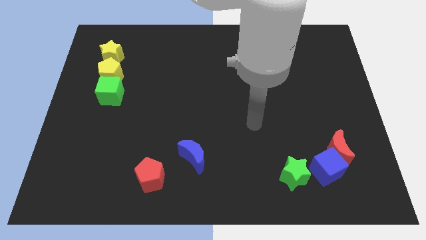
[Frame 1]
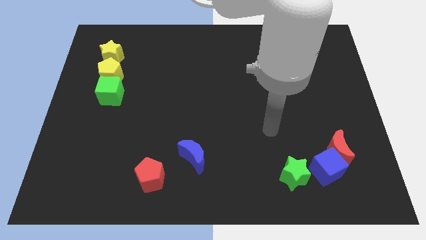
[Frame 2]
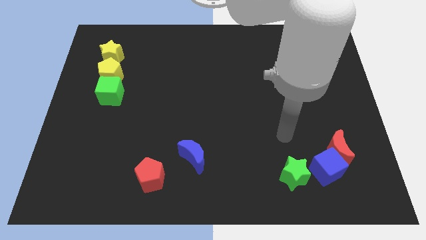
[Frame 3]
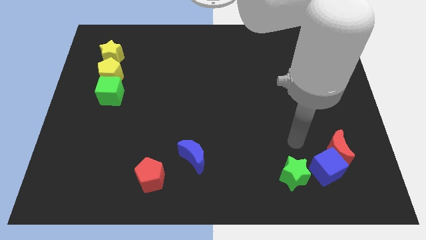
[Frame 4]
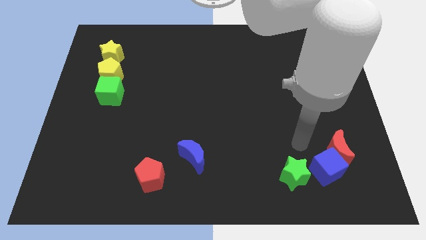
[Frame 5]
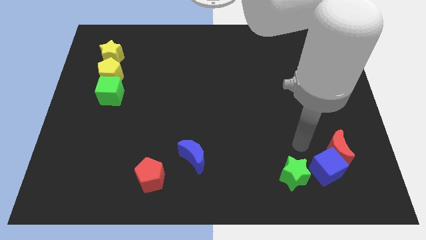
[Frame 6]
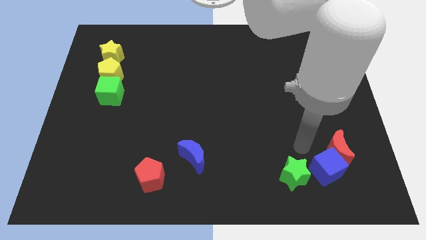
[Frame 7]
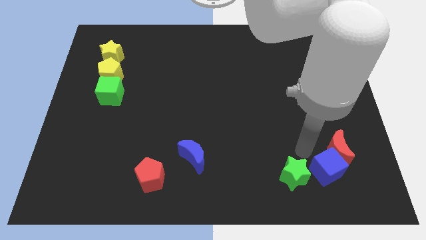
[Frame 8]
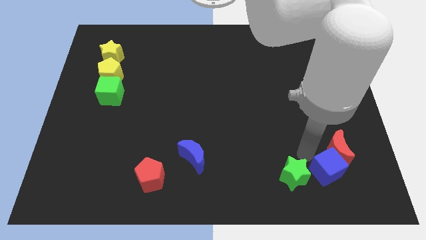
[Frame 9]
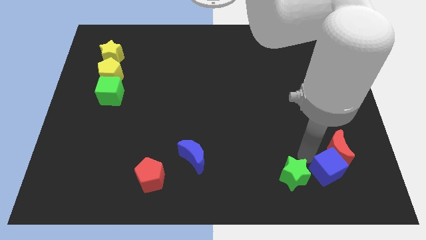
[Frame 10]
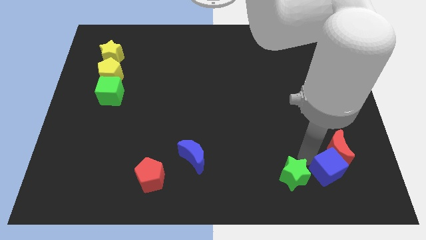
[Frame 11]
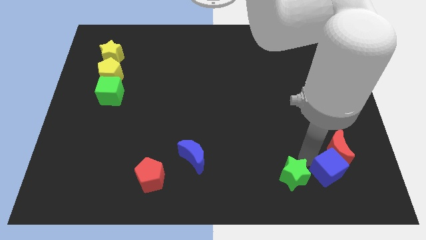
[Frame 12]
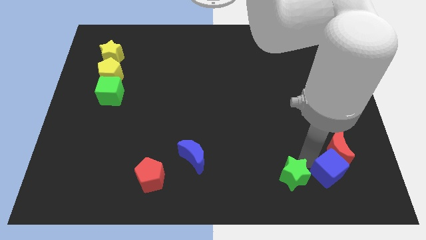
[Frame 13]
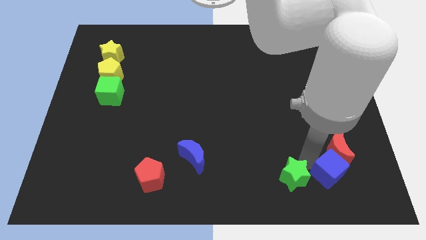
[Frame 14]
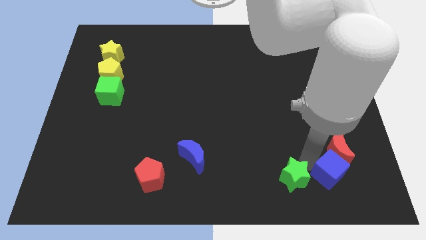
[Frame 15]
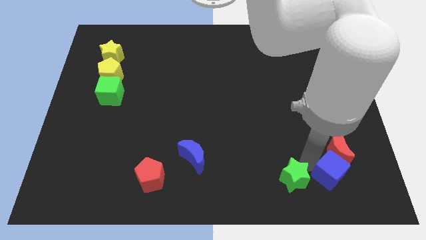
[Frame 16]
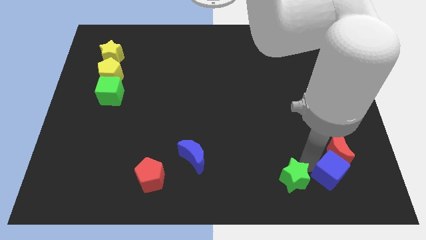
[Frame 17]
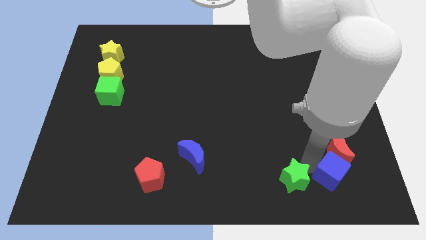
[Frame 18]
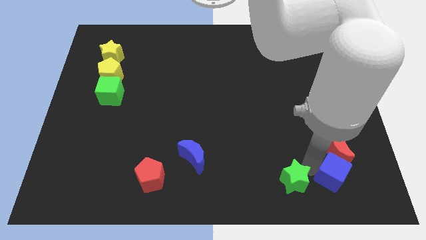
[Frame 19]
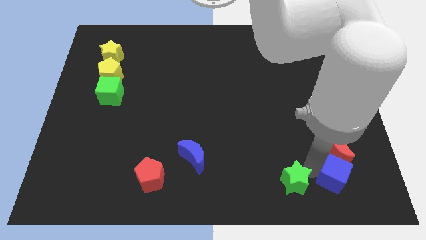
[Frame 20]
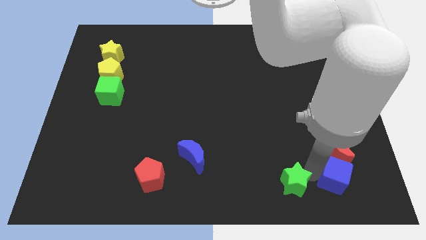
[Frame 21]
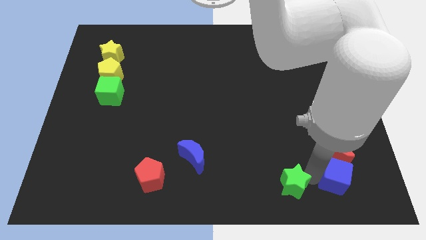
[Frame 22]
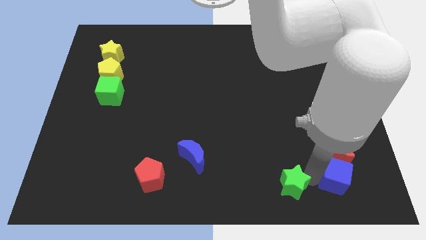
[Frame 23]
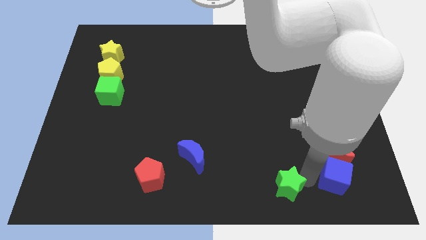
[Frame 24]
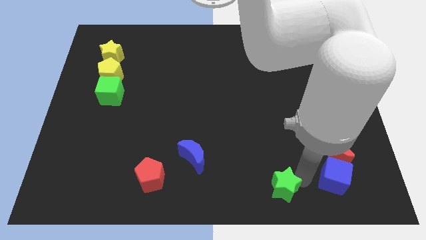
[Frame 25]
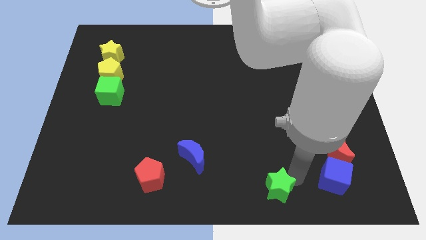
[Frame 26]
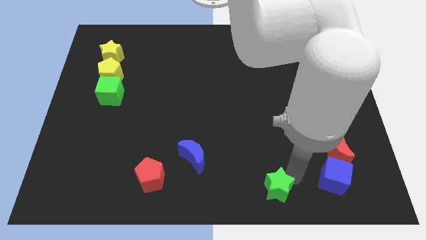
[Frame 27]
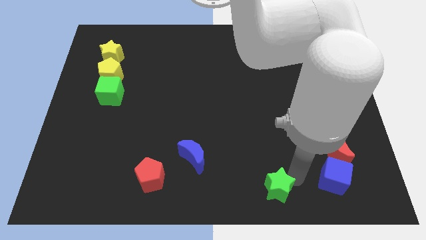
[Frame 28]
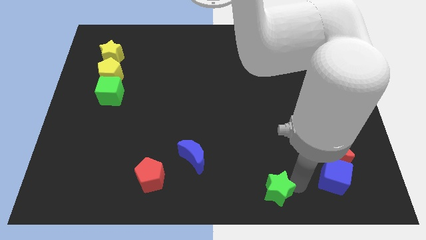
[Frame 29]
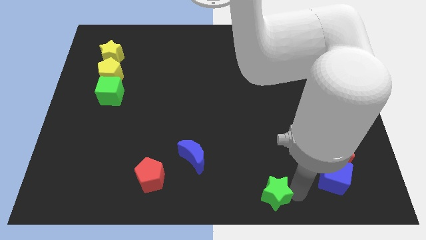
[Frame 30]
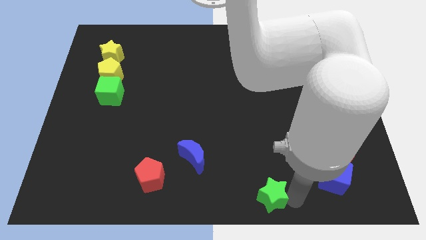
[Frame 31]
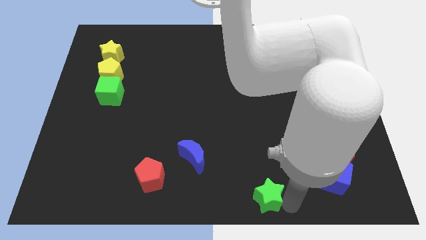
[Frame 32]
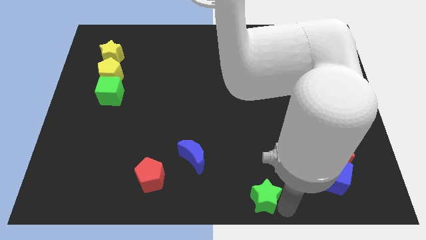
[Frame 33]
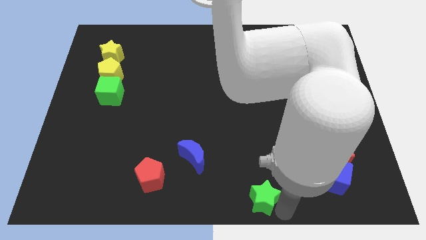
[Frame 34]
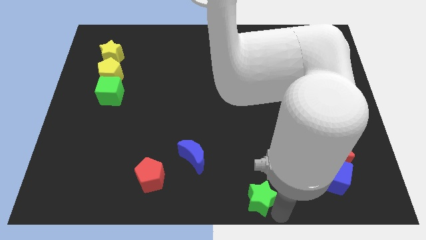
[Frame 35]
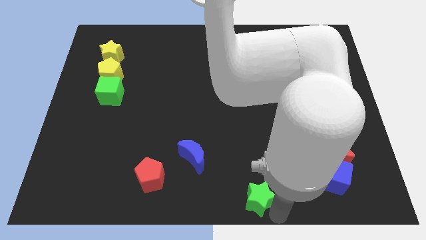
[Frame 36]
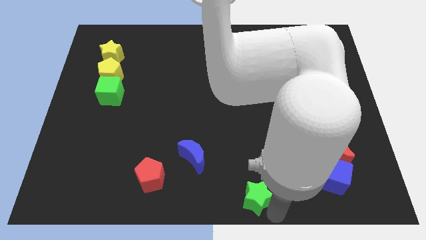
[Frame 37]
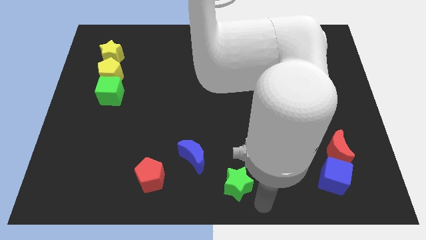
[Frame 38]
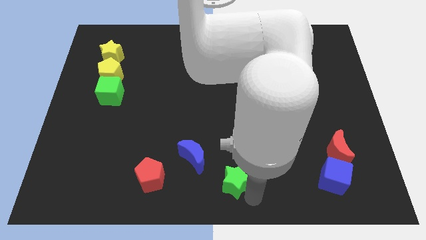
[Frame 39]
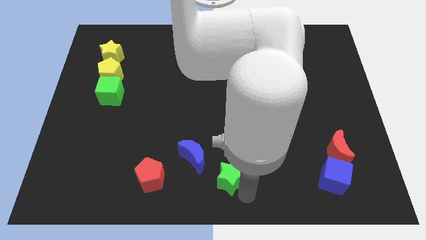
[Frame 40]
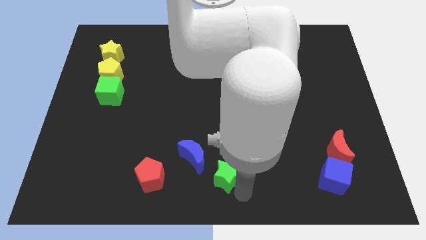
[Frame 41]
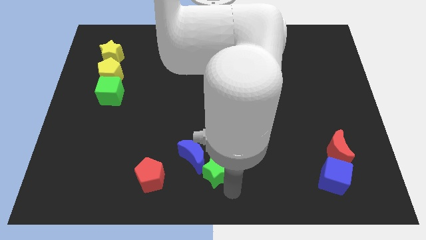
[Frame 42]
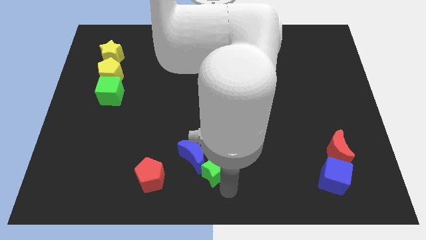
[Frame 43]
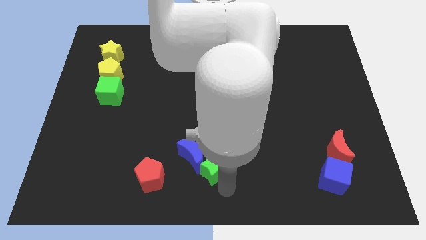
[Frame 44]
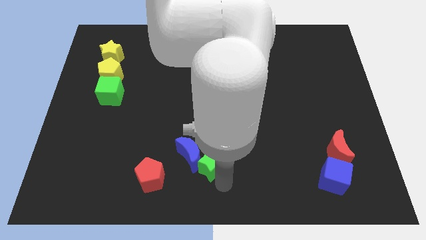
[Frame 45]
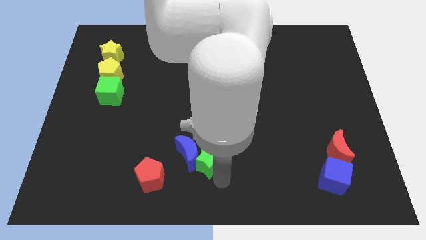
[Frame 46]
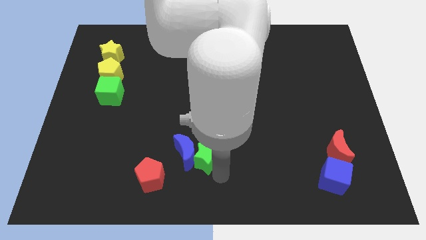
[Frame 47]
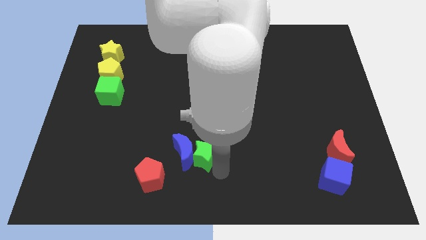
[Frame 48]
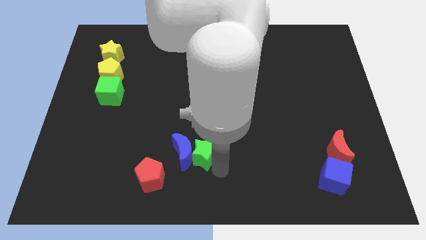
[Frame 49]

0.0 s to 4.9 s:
place the green star to the right of the blue crescent

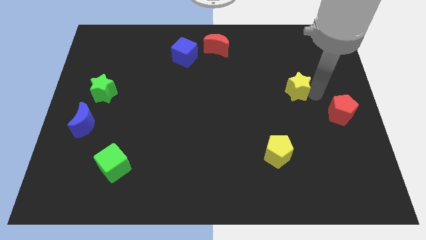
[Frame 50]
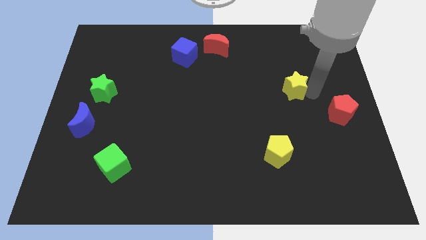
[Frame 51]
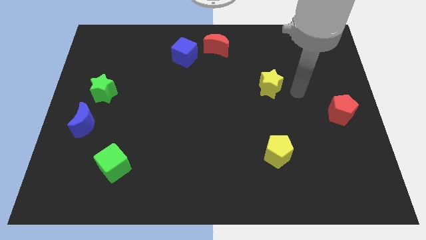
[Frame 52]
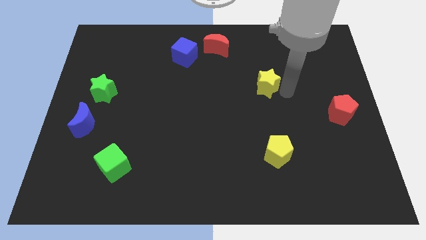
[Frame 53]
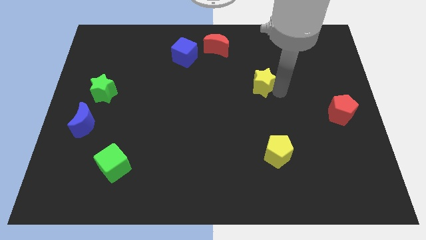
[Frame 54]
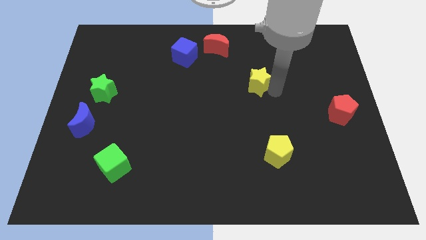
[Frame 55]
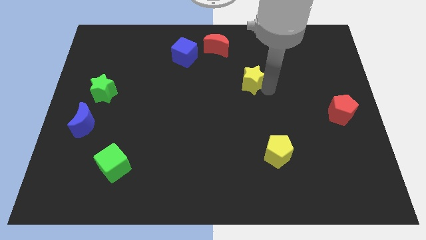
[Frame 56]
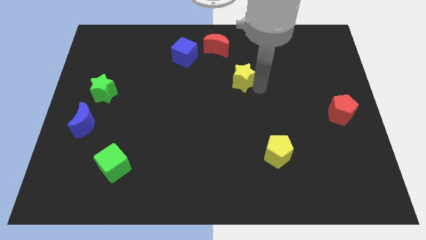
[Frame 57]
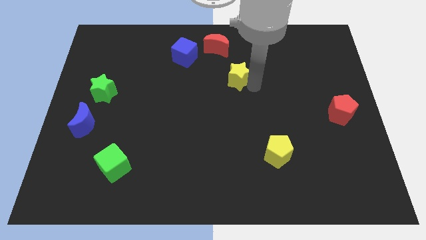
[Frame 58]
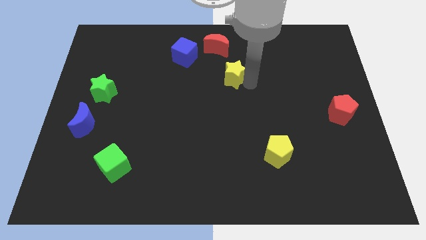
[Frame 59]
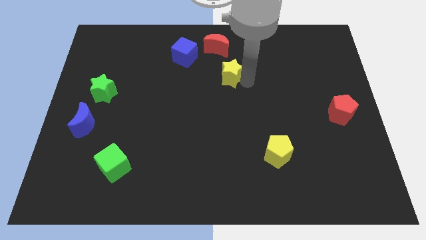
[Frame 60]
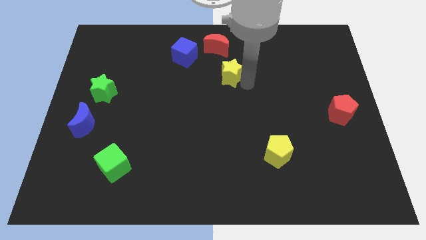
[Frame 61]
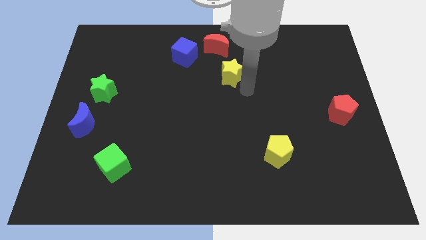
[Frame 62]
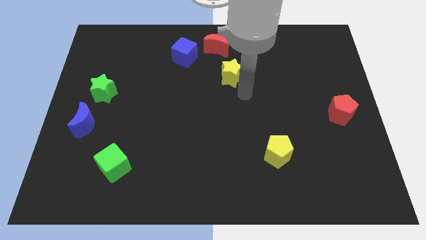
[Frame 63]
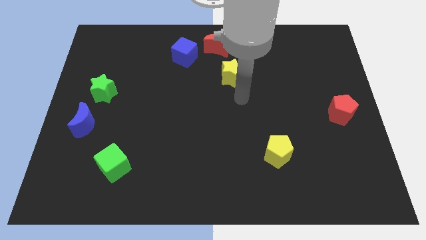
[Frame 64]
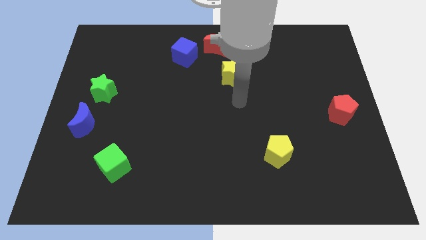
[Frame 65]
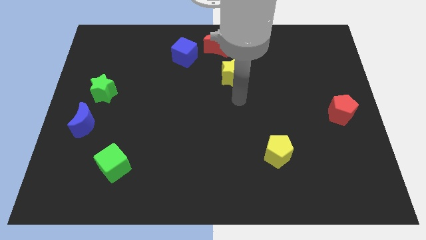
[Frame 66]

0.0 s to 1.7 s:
place yellow star to the bottom right of red moon

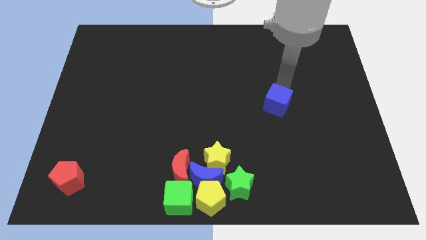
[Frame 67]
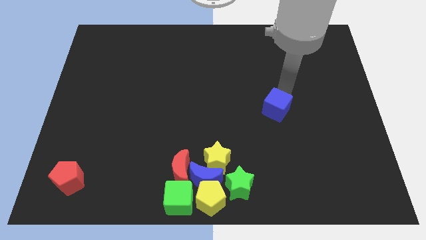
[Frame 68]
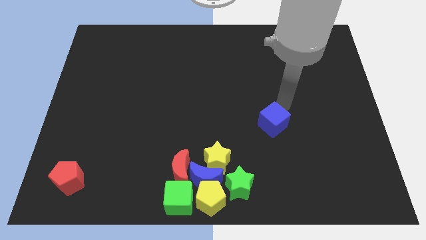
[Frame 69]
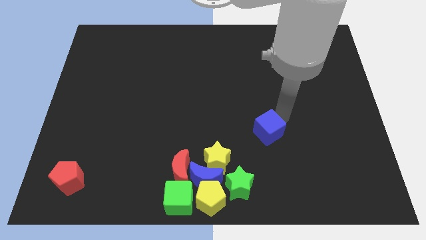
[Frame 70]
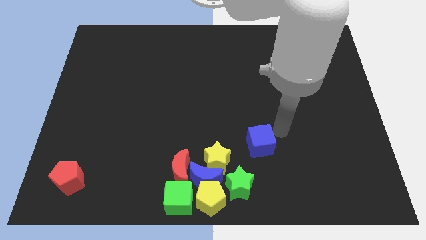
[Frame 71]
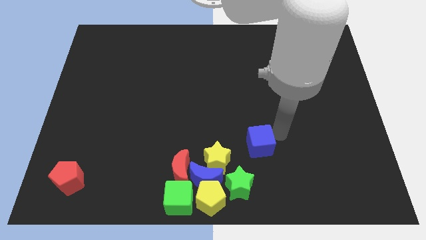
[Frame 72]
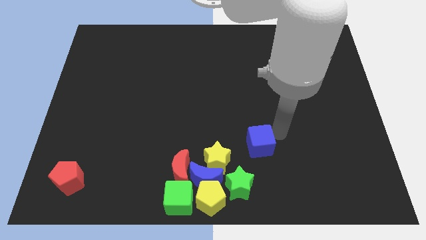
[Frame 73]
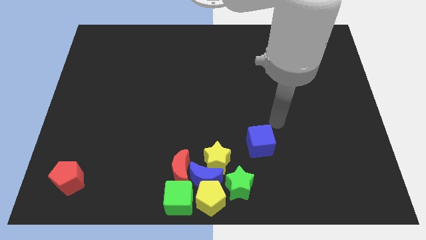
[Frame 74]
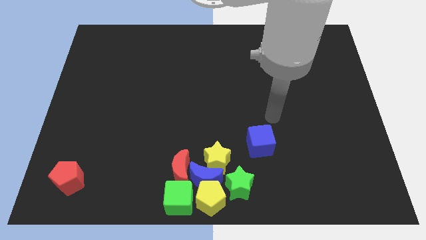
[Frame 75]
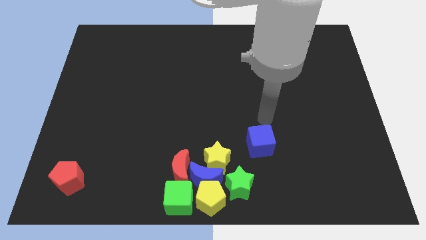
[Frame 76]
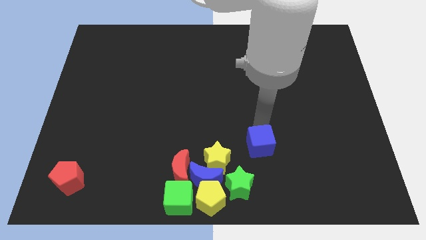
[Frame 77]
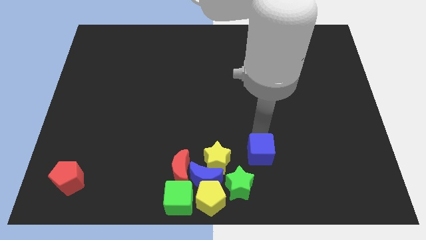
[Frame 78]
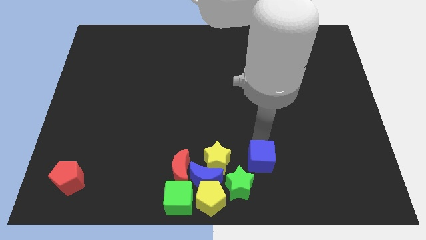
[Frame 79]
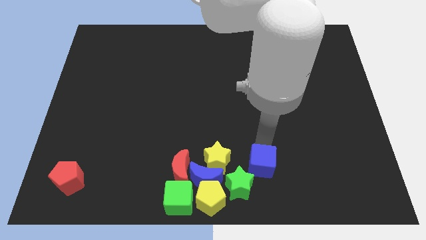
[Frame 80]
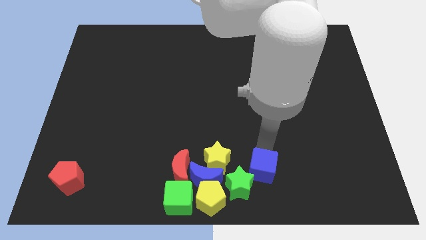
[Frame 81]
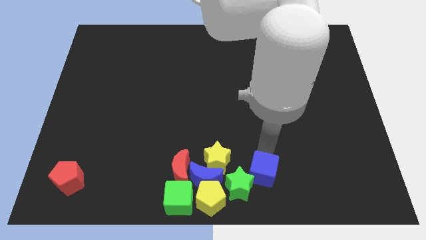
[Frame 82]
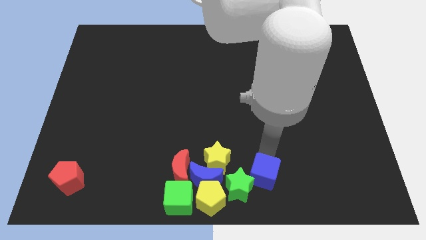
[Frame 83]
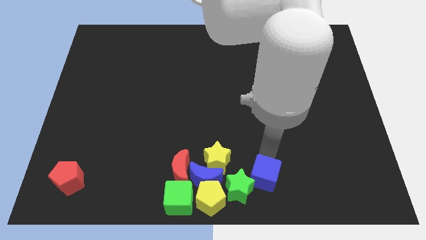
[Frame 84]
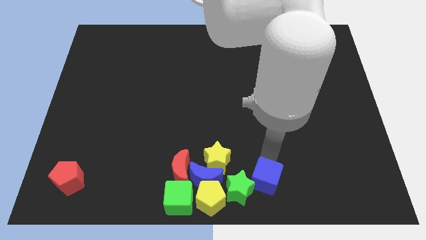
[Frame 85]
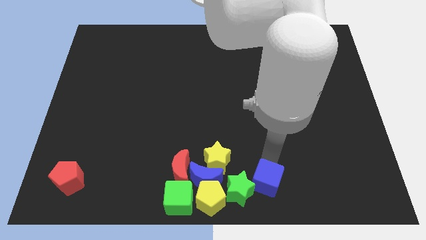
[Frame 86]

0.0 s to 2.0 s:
place blue cube near green star

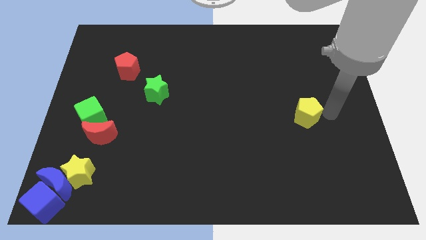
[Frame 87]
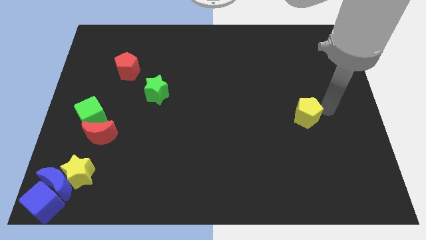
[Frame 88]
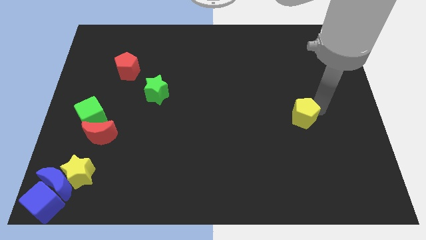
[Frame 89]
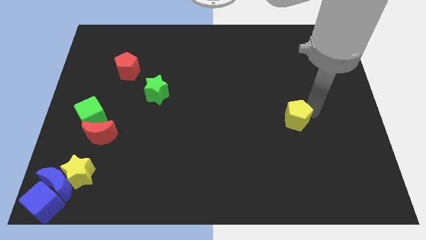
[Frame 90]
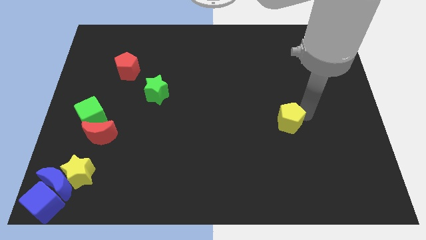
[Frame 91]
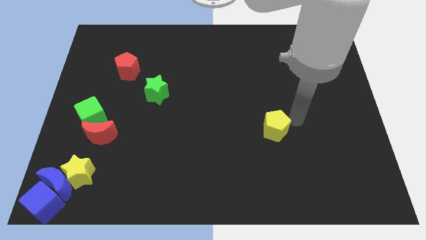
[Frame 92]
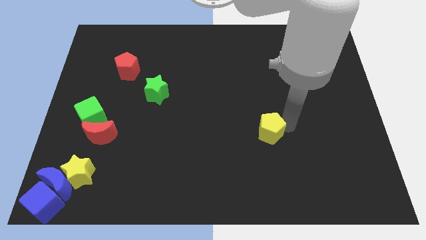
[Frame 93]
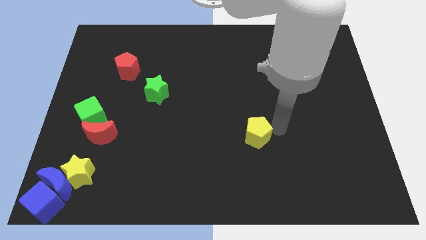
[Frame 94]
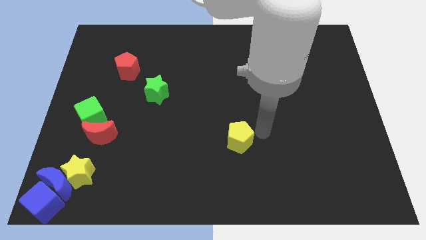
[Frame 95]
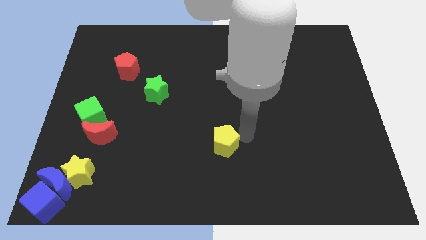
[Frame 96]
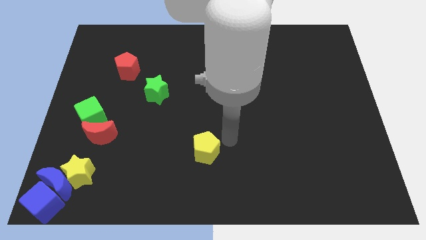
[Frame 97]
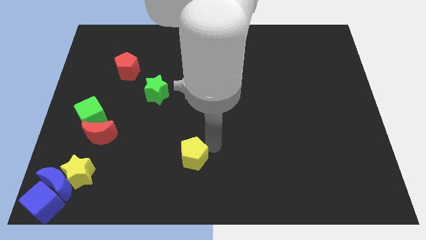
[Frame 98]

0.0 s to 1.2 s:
push the yellow pentagon towards the bottom center of the board
